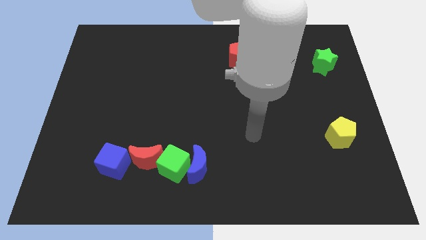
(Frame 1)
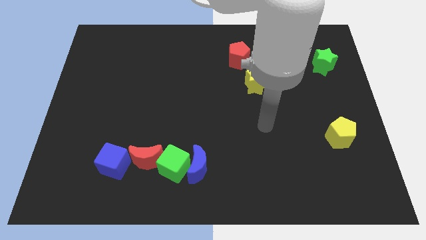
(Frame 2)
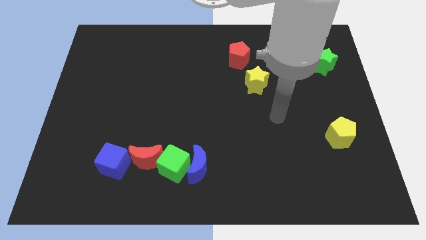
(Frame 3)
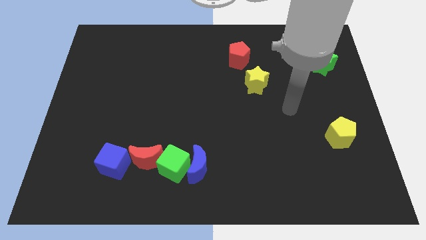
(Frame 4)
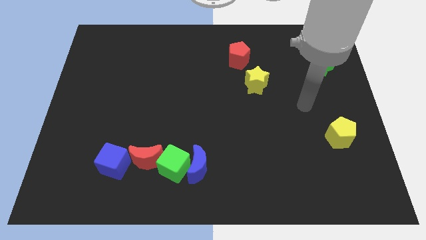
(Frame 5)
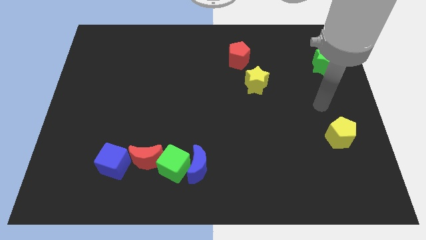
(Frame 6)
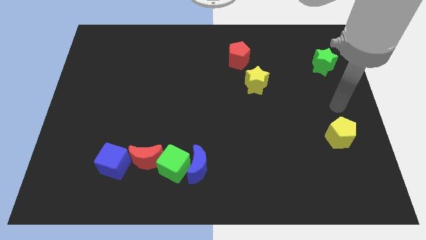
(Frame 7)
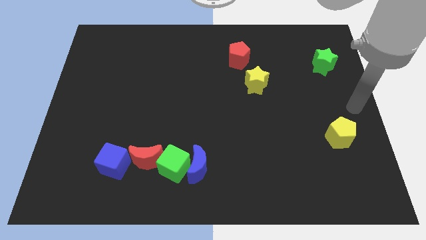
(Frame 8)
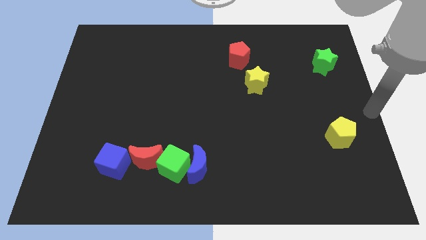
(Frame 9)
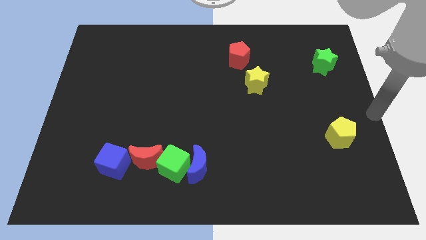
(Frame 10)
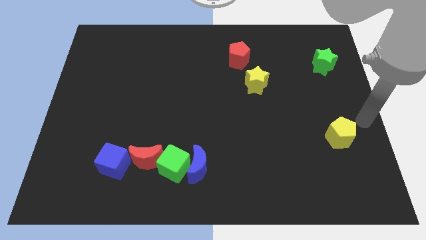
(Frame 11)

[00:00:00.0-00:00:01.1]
move the arm to the middle right

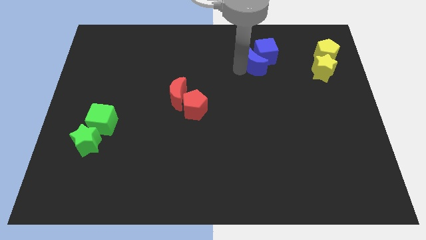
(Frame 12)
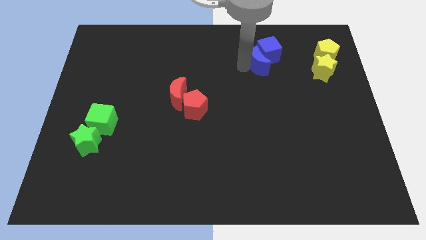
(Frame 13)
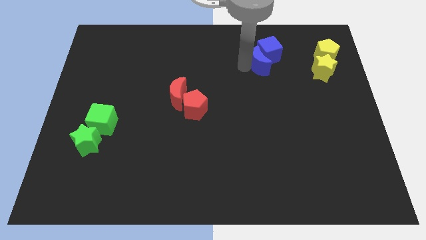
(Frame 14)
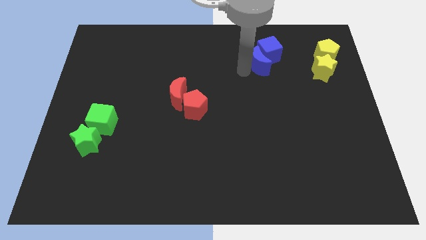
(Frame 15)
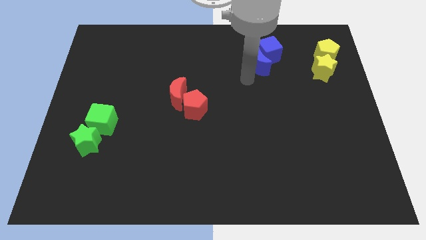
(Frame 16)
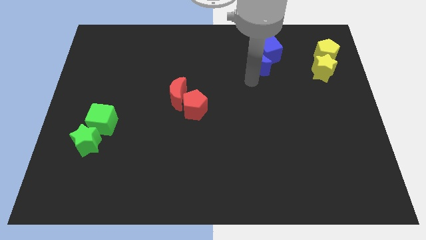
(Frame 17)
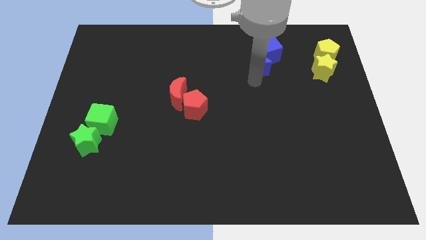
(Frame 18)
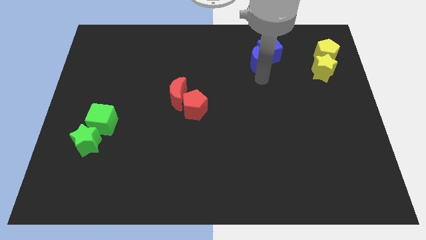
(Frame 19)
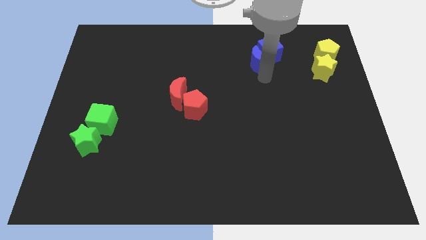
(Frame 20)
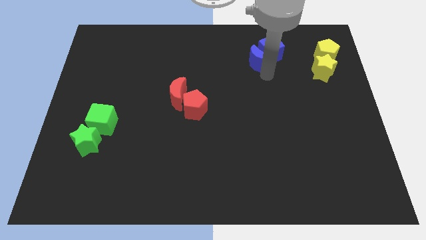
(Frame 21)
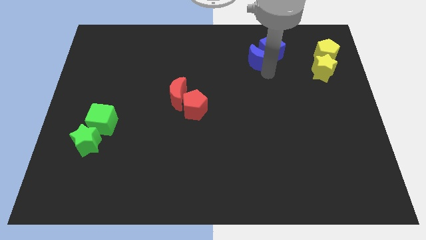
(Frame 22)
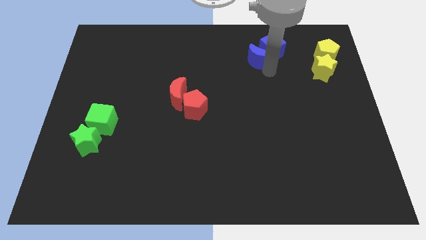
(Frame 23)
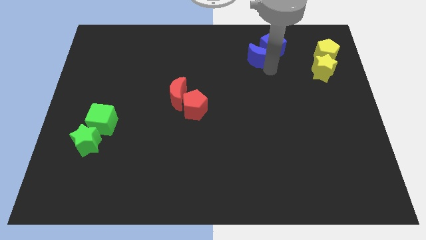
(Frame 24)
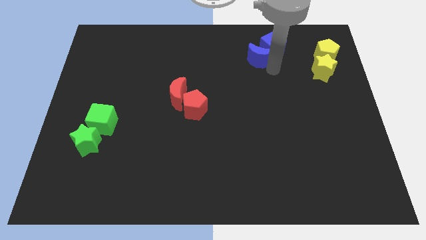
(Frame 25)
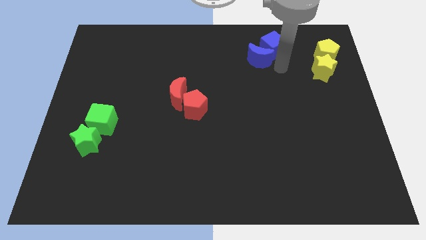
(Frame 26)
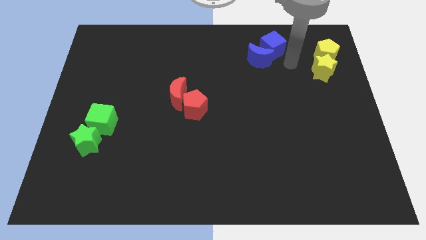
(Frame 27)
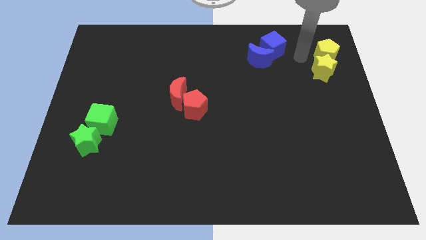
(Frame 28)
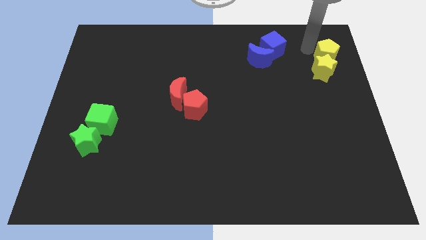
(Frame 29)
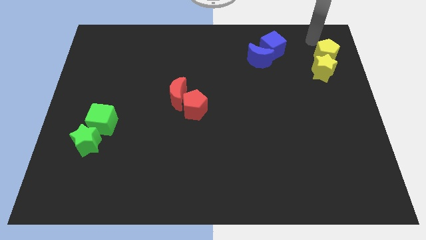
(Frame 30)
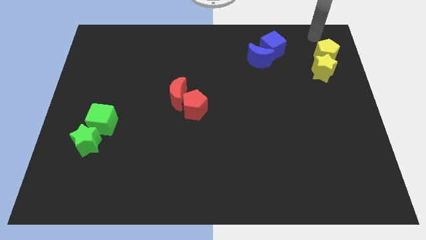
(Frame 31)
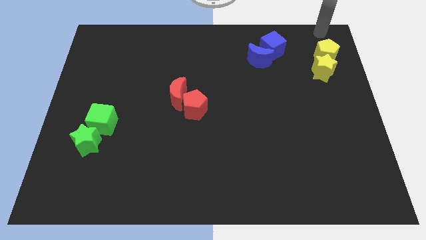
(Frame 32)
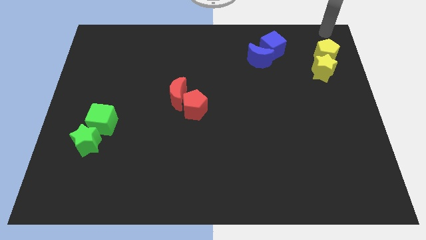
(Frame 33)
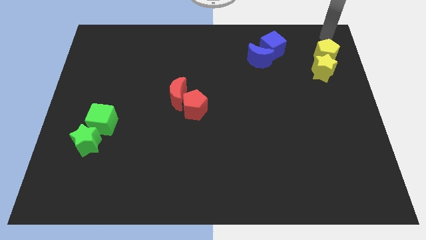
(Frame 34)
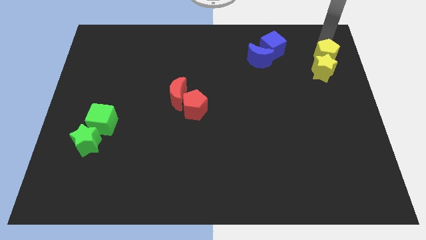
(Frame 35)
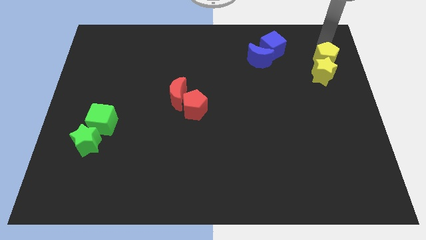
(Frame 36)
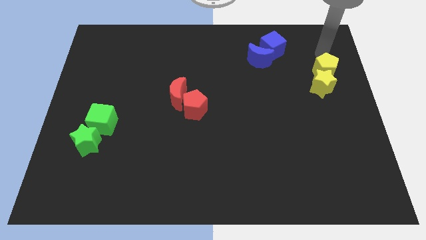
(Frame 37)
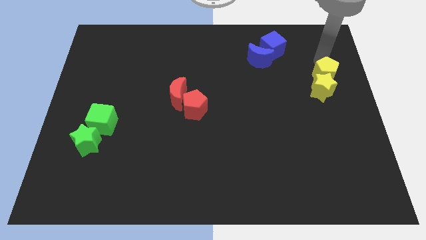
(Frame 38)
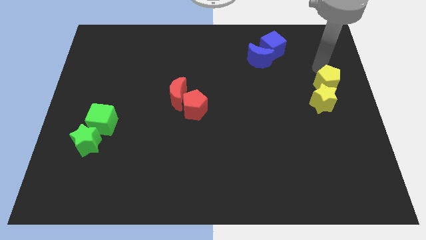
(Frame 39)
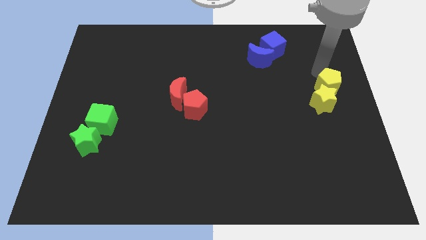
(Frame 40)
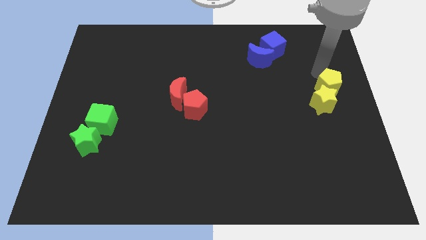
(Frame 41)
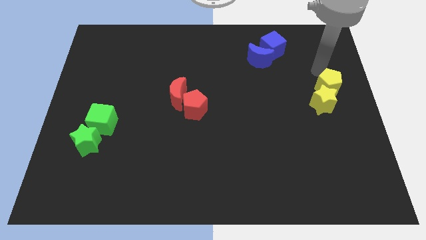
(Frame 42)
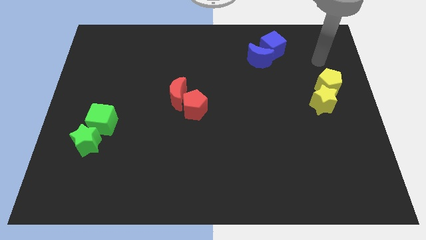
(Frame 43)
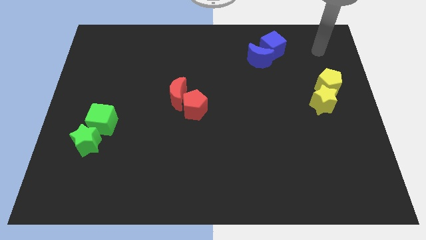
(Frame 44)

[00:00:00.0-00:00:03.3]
move the blue and yellow blocks in different directions

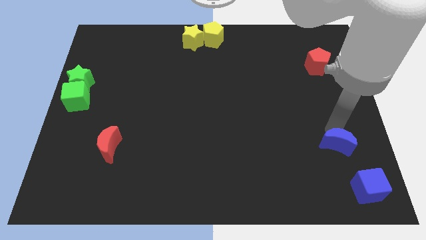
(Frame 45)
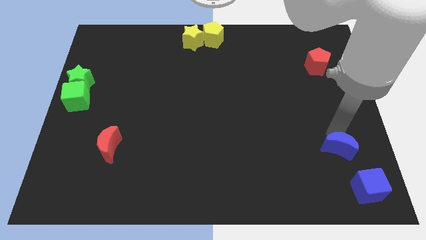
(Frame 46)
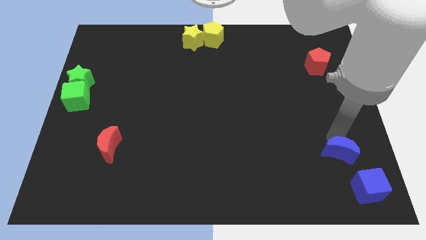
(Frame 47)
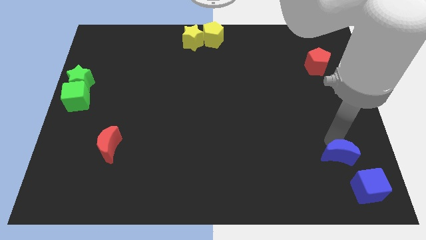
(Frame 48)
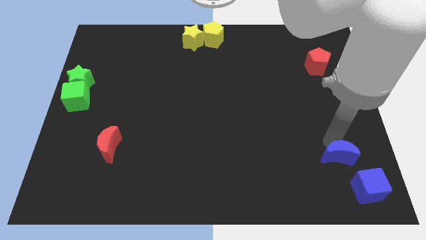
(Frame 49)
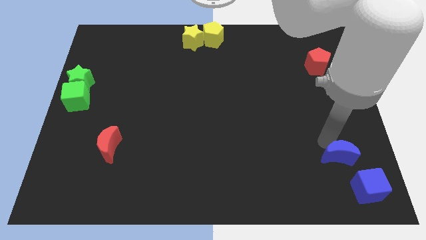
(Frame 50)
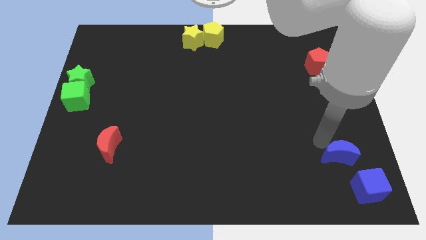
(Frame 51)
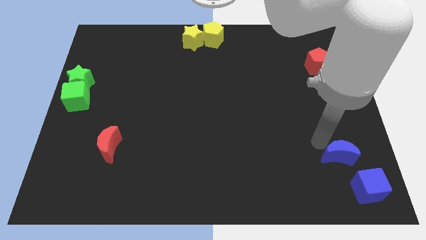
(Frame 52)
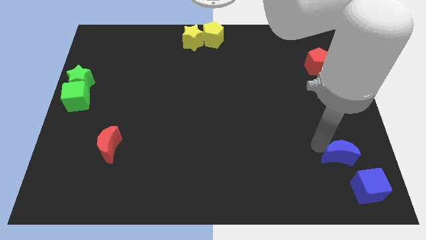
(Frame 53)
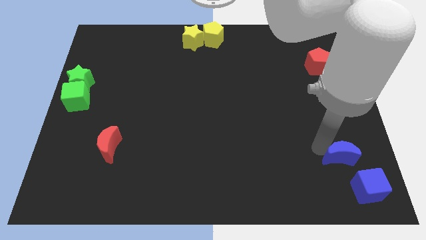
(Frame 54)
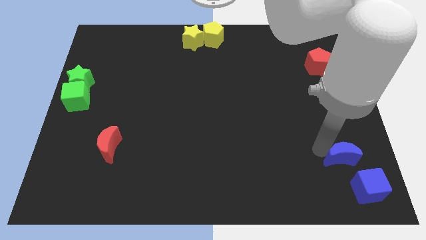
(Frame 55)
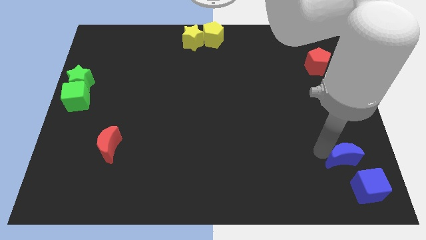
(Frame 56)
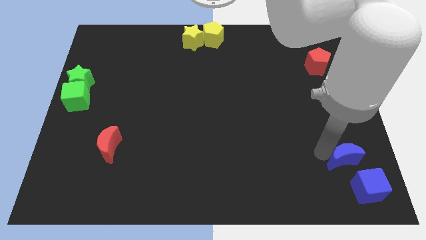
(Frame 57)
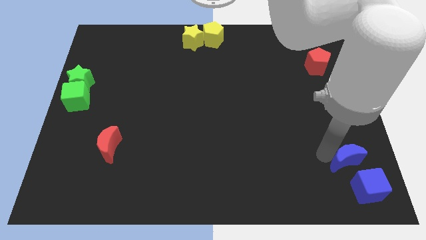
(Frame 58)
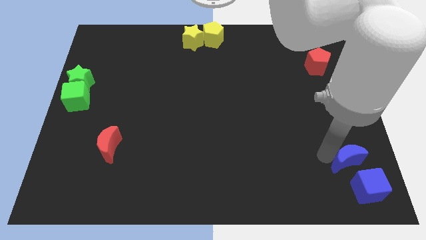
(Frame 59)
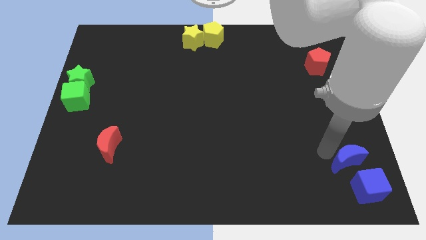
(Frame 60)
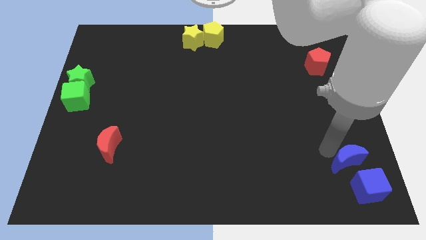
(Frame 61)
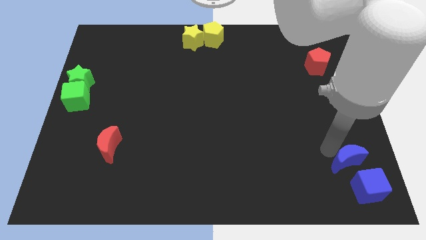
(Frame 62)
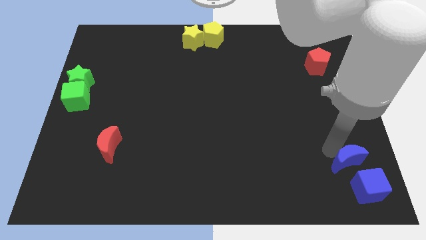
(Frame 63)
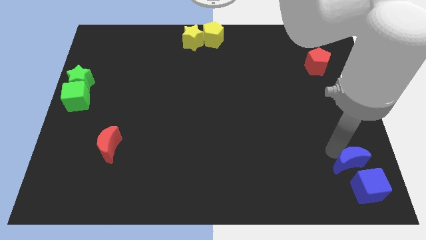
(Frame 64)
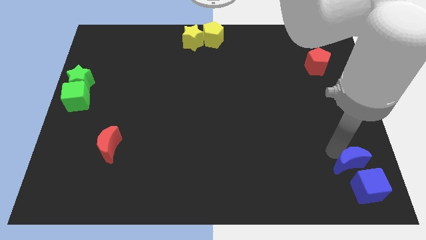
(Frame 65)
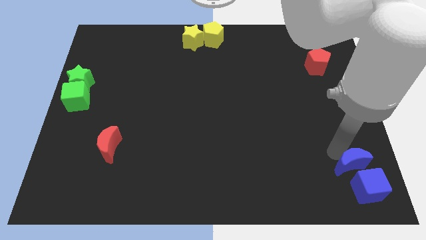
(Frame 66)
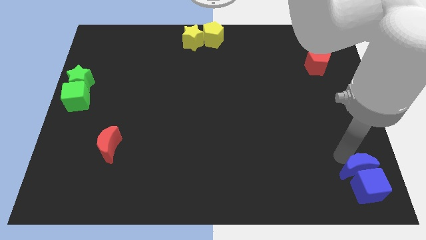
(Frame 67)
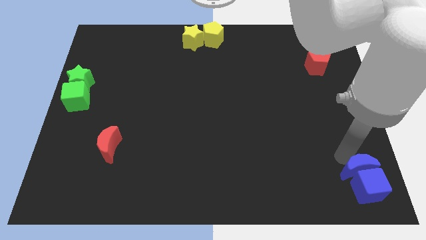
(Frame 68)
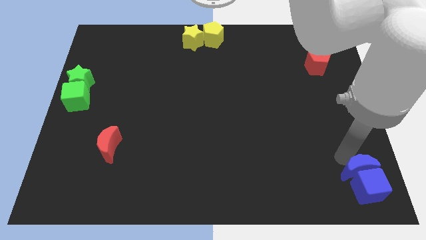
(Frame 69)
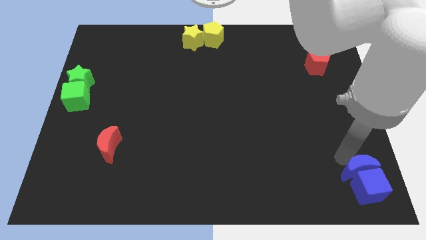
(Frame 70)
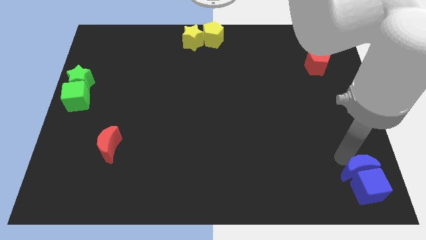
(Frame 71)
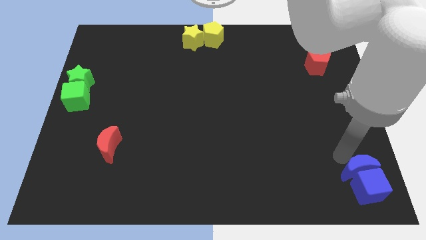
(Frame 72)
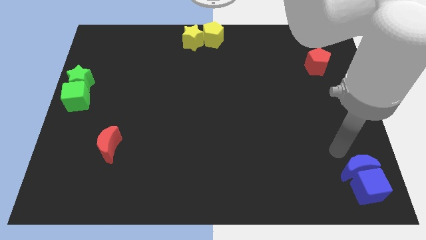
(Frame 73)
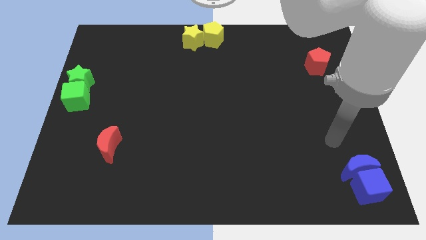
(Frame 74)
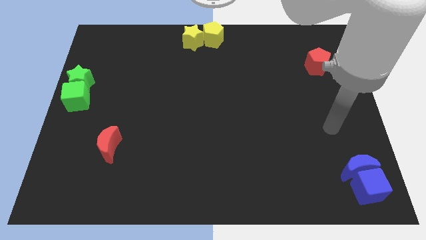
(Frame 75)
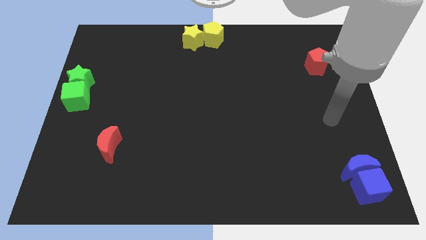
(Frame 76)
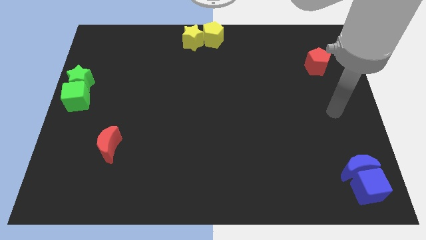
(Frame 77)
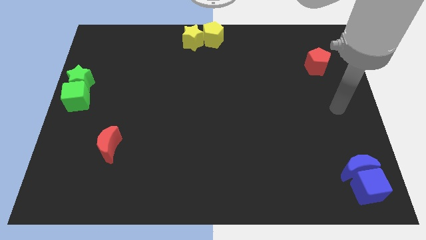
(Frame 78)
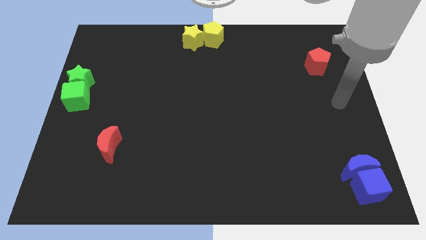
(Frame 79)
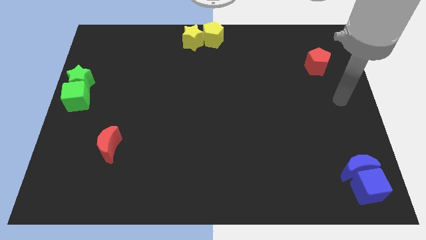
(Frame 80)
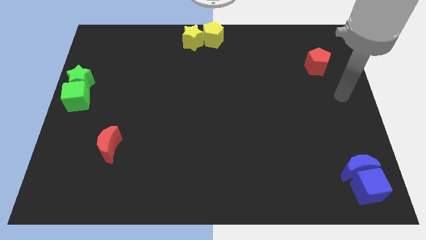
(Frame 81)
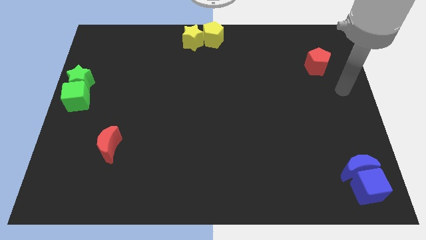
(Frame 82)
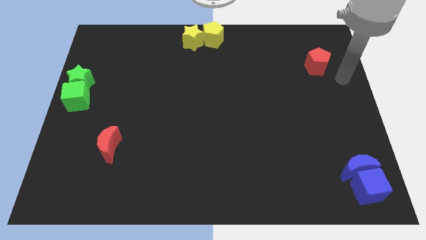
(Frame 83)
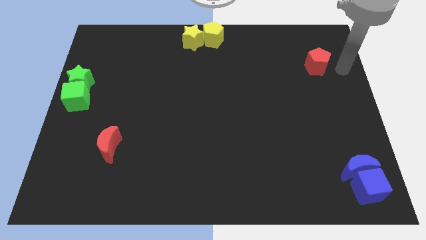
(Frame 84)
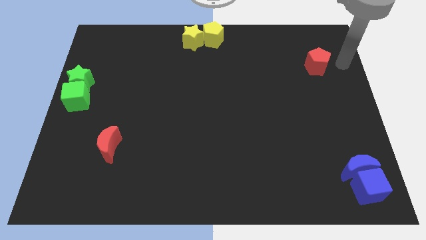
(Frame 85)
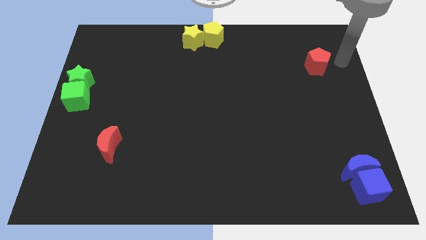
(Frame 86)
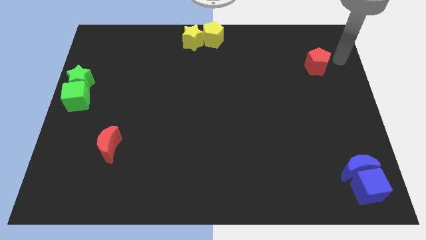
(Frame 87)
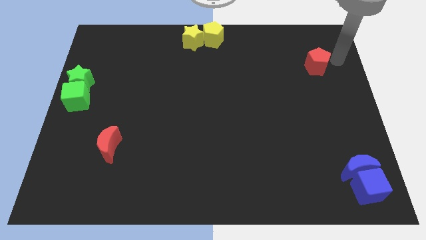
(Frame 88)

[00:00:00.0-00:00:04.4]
put the blue semicircle and blue cube together

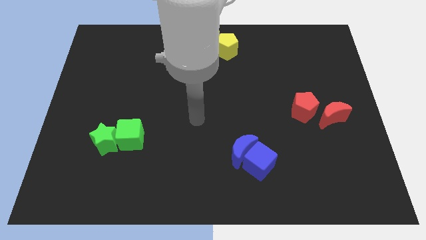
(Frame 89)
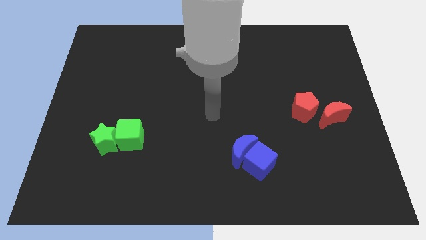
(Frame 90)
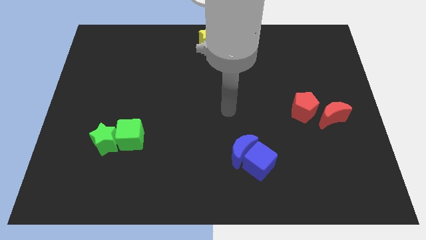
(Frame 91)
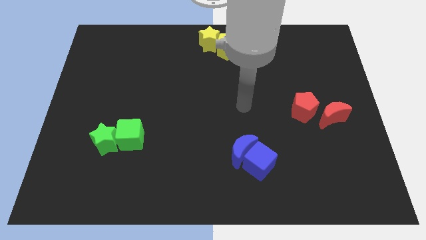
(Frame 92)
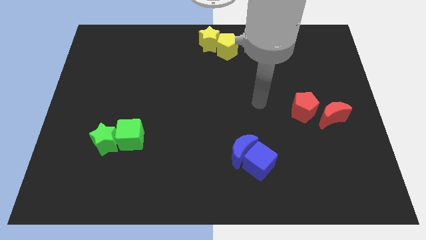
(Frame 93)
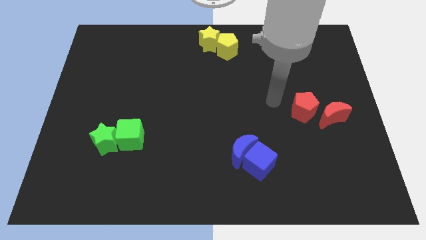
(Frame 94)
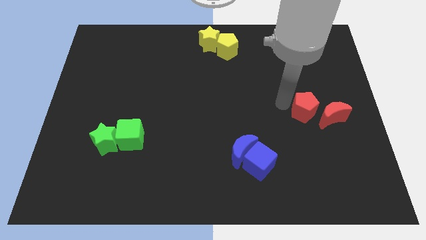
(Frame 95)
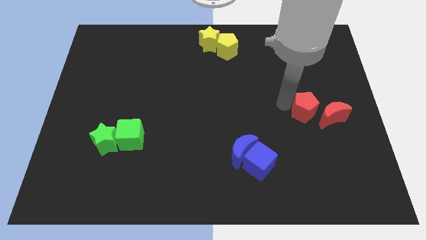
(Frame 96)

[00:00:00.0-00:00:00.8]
place your arm to the left of the red pentagon
